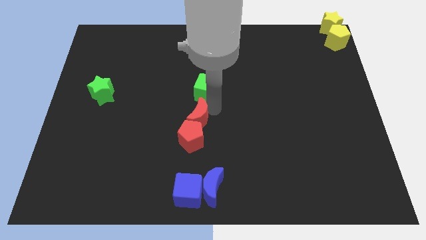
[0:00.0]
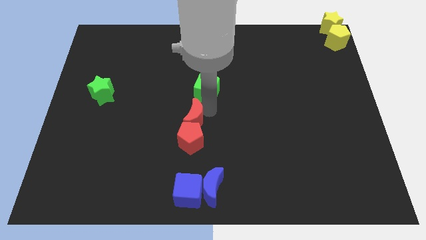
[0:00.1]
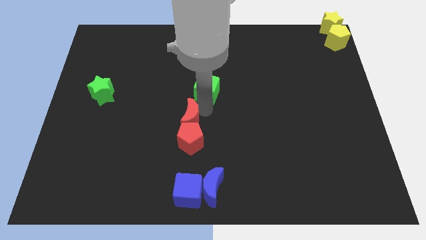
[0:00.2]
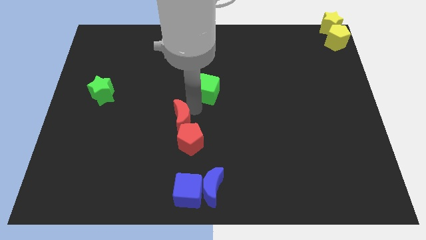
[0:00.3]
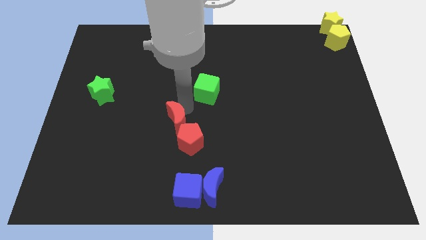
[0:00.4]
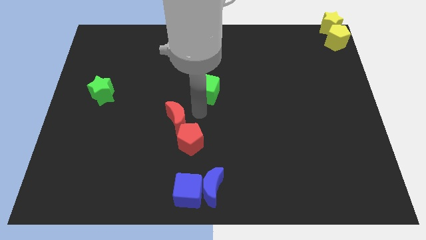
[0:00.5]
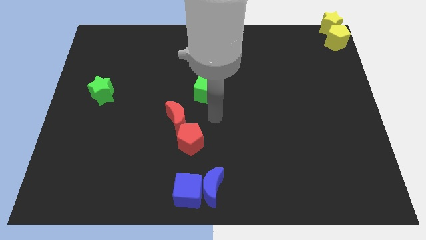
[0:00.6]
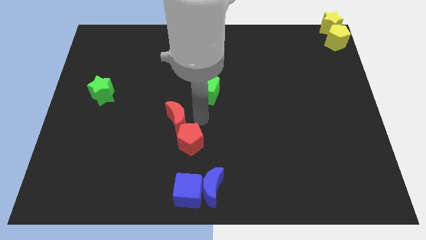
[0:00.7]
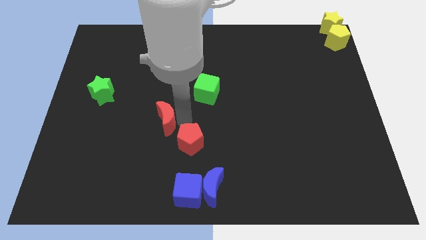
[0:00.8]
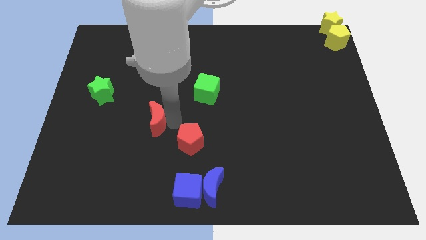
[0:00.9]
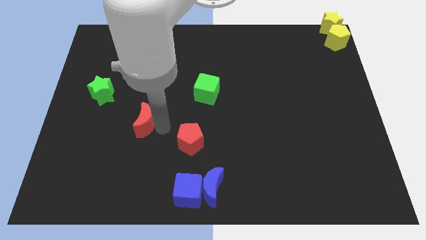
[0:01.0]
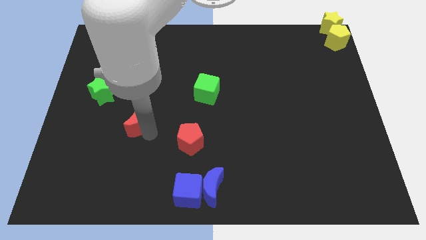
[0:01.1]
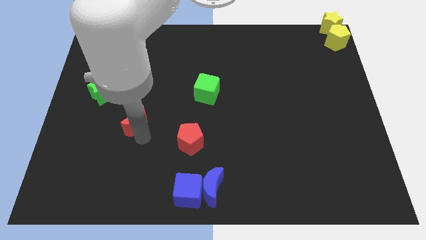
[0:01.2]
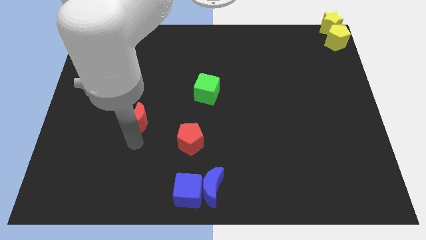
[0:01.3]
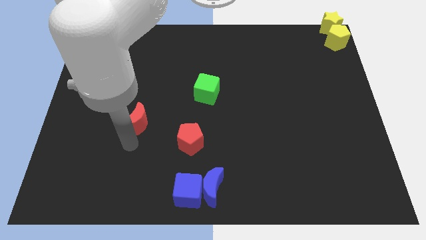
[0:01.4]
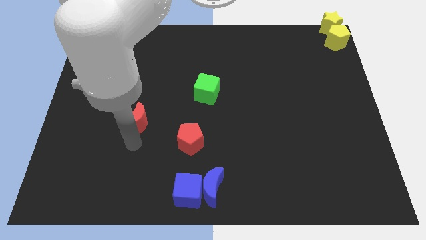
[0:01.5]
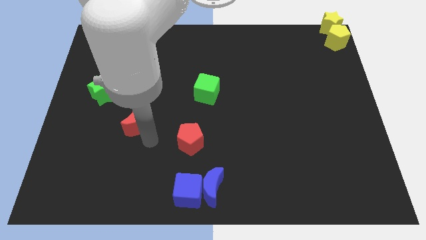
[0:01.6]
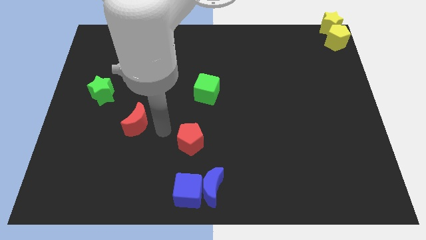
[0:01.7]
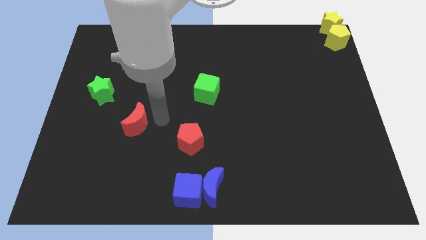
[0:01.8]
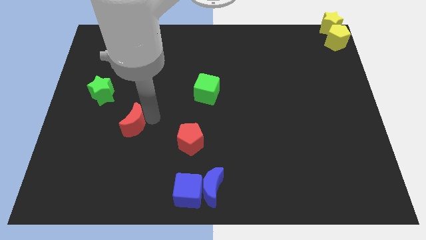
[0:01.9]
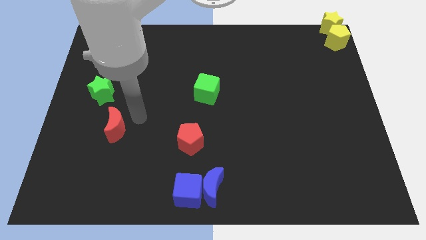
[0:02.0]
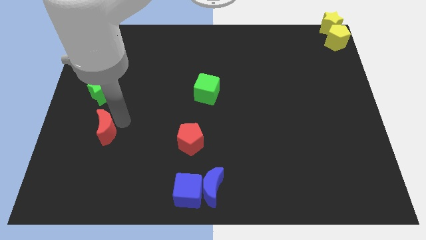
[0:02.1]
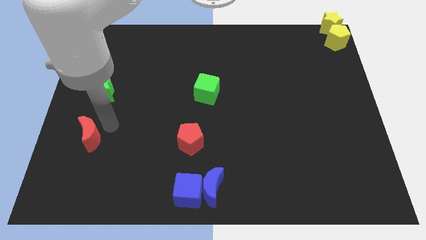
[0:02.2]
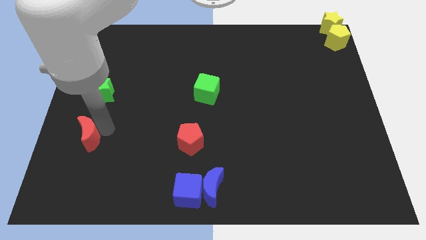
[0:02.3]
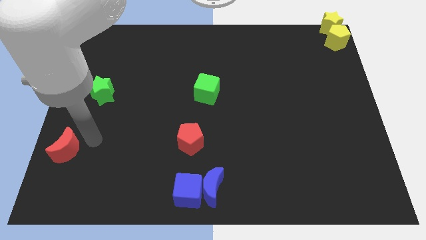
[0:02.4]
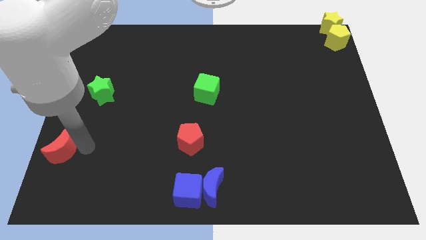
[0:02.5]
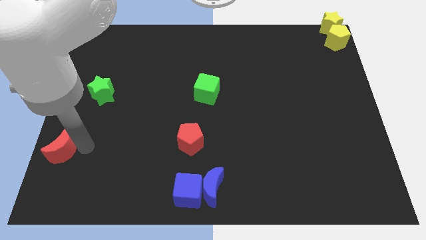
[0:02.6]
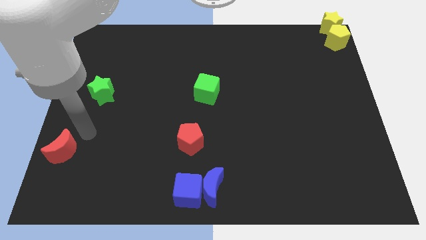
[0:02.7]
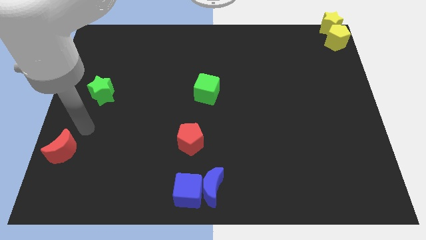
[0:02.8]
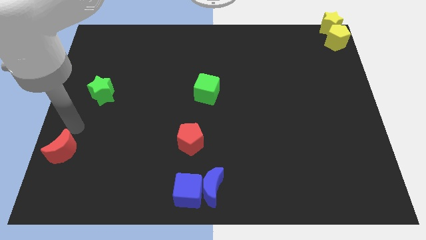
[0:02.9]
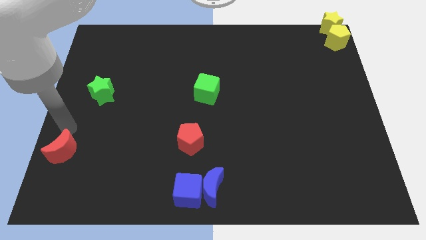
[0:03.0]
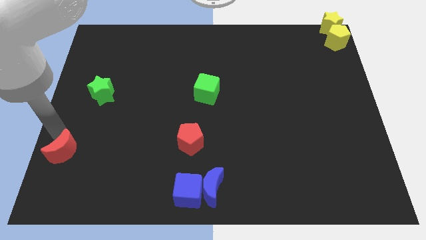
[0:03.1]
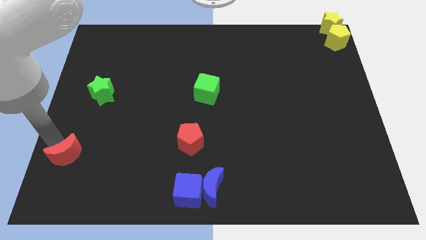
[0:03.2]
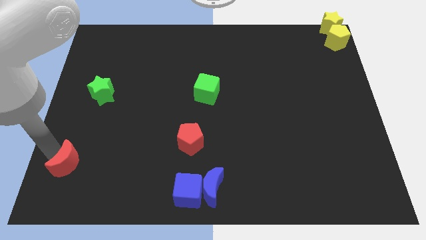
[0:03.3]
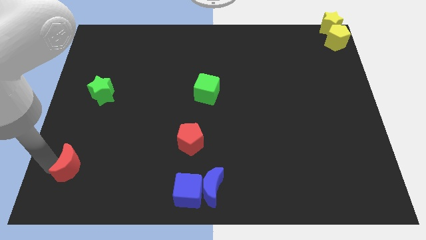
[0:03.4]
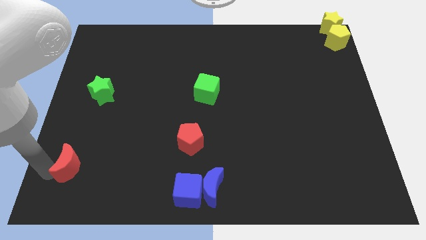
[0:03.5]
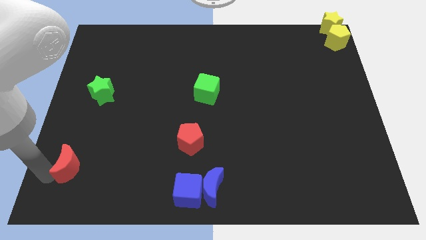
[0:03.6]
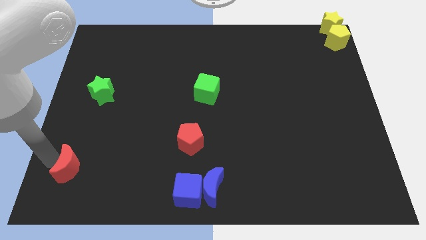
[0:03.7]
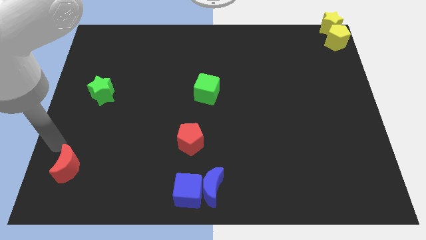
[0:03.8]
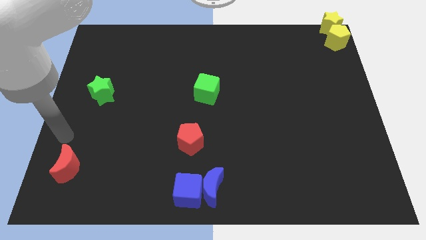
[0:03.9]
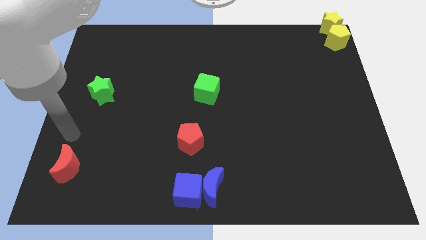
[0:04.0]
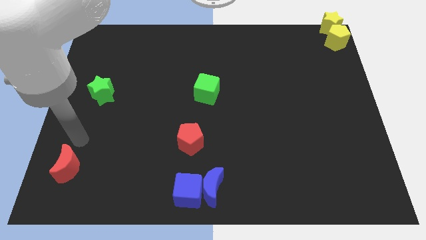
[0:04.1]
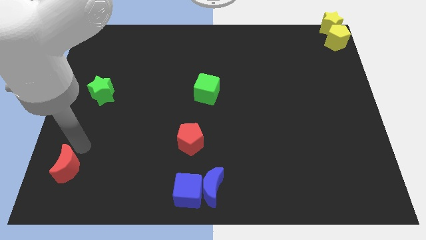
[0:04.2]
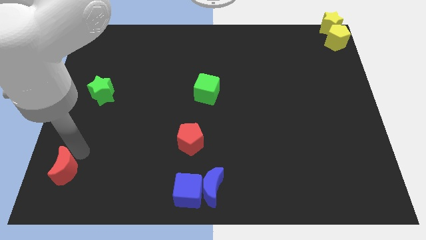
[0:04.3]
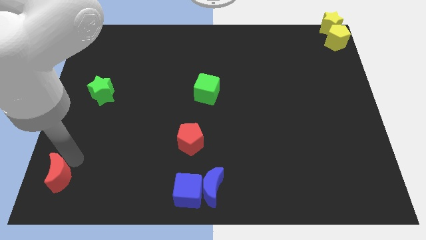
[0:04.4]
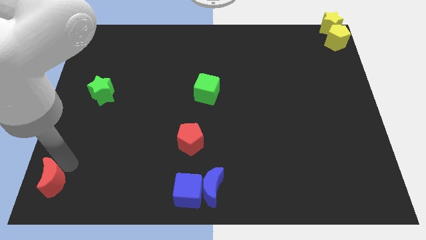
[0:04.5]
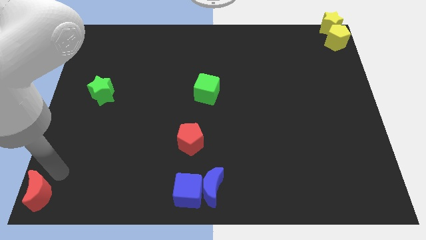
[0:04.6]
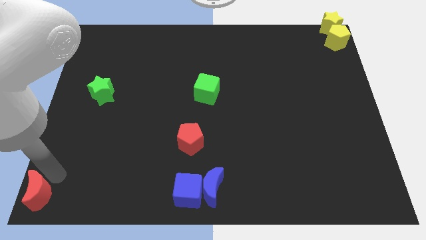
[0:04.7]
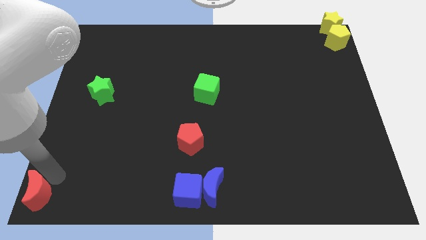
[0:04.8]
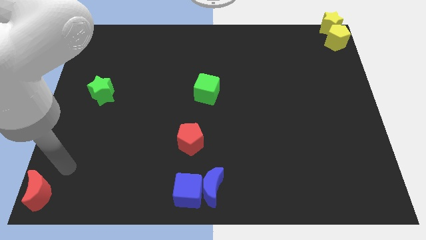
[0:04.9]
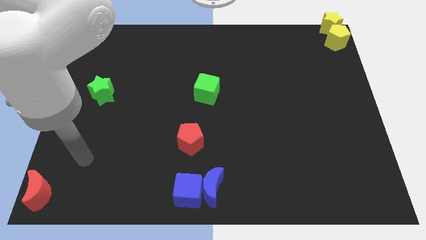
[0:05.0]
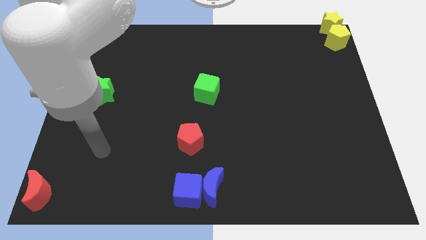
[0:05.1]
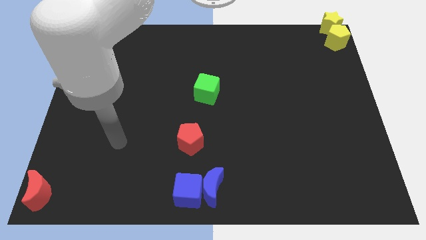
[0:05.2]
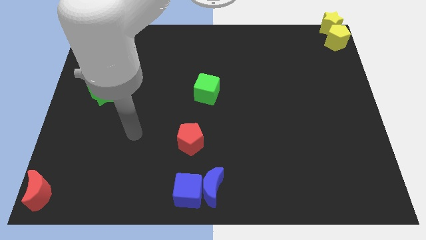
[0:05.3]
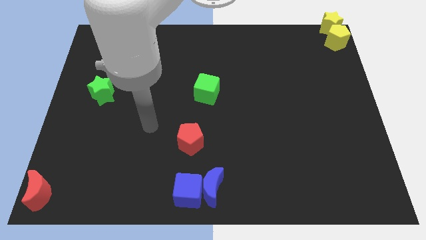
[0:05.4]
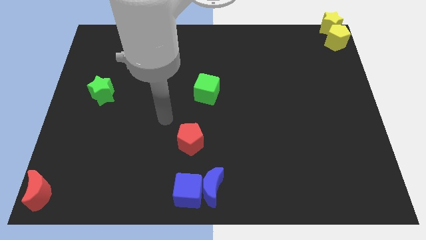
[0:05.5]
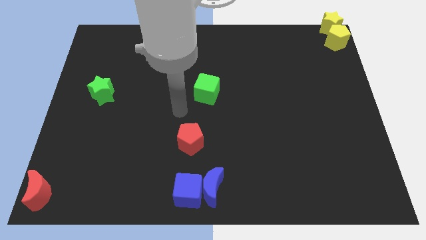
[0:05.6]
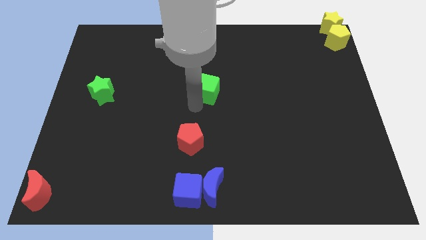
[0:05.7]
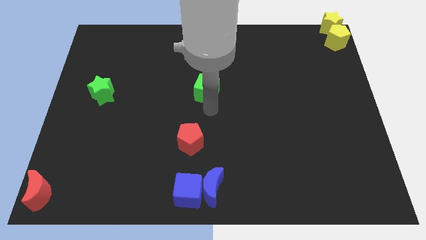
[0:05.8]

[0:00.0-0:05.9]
place red crescent below left corner

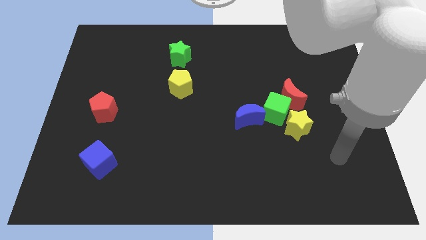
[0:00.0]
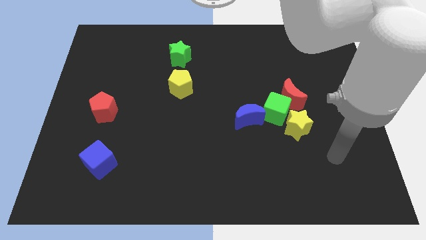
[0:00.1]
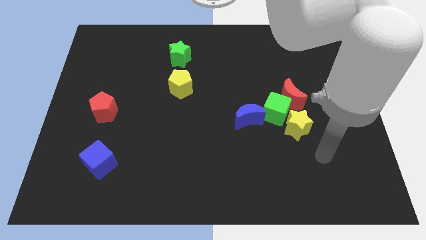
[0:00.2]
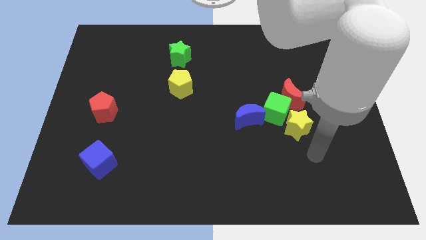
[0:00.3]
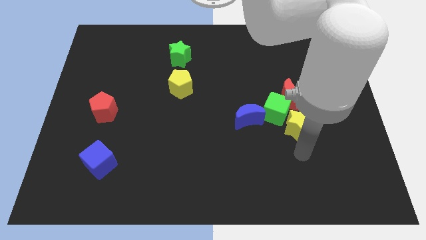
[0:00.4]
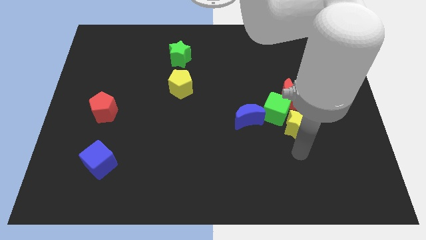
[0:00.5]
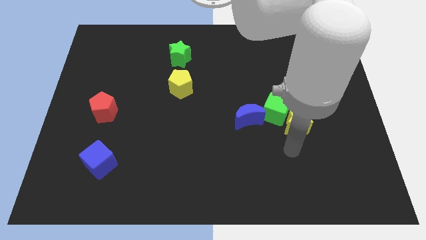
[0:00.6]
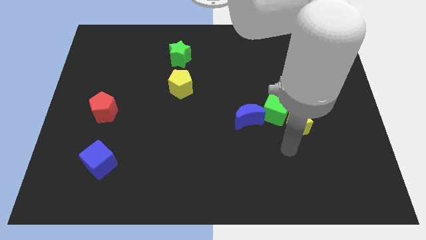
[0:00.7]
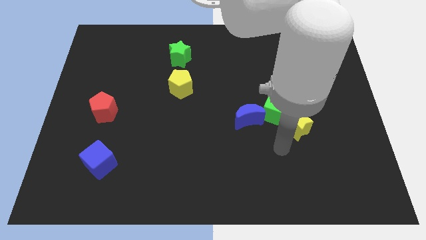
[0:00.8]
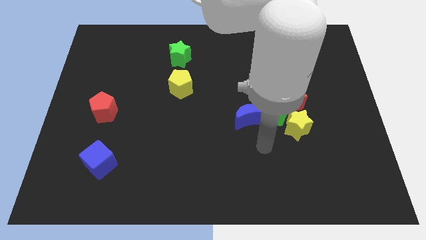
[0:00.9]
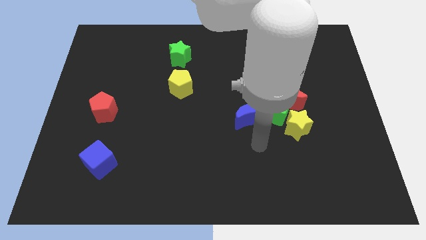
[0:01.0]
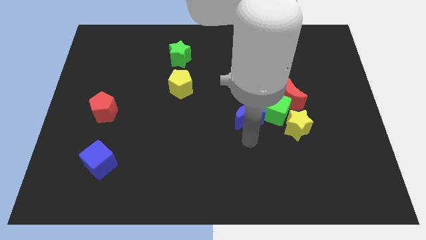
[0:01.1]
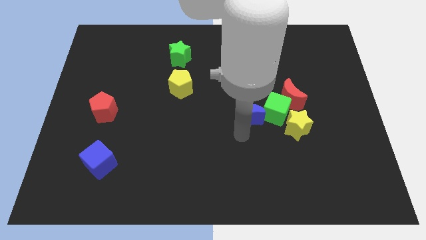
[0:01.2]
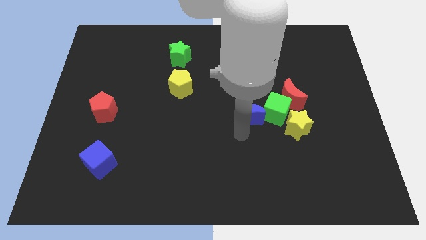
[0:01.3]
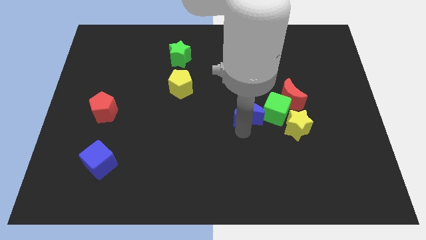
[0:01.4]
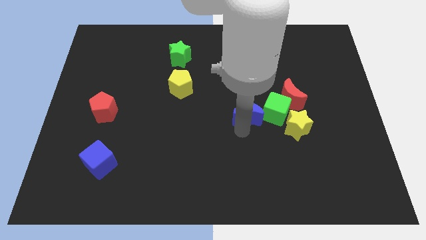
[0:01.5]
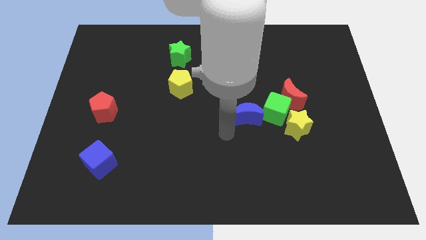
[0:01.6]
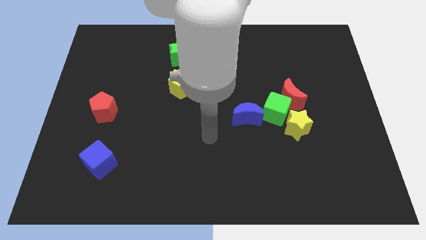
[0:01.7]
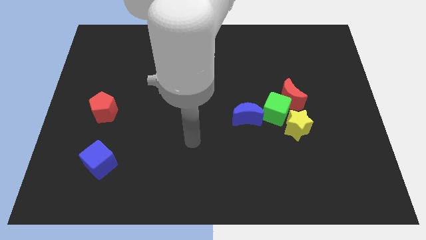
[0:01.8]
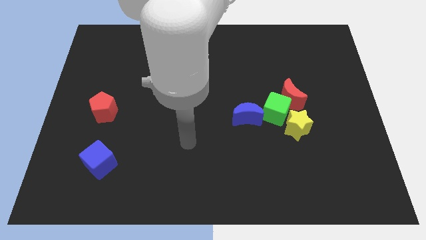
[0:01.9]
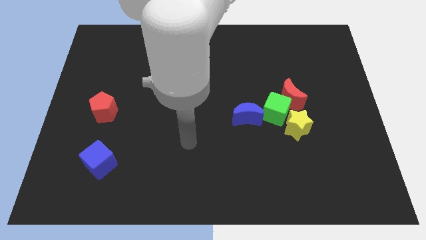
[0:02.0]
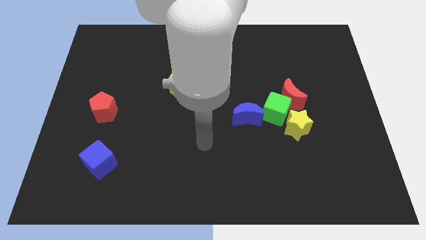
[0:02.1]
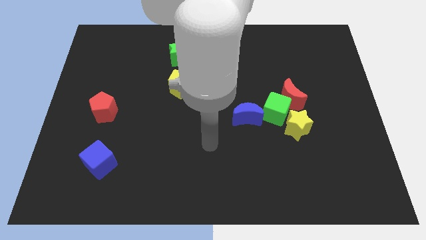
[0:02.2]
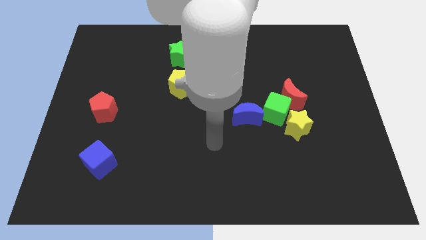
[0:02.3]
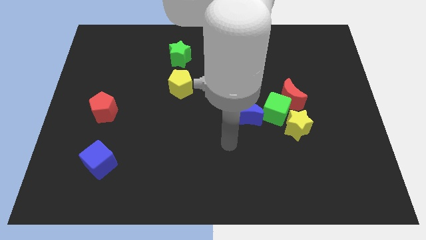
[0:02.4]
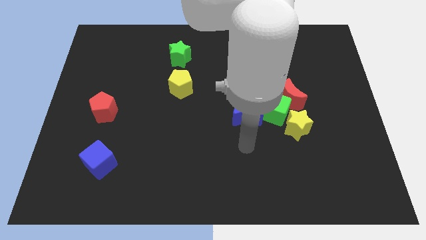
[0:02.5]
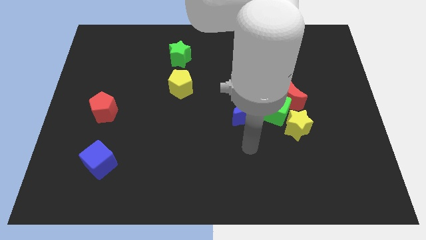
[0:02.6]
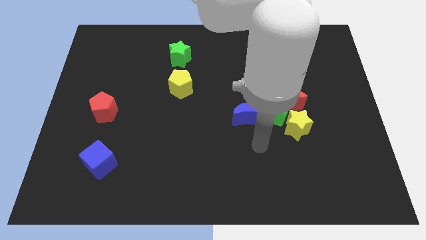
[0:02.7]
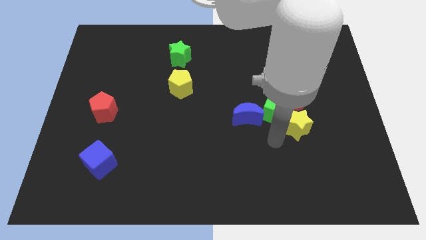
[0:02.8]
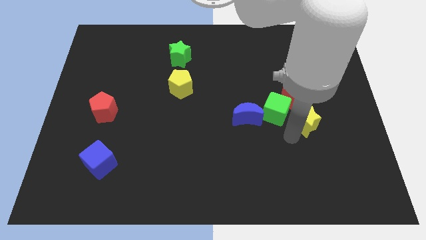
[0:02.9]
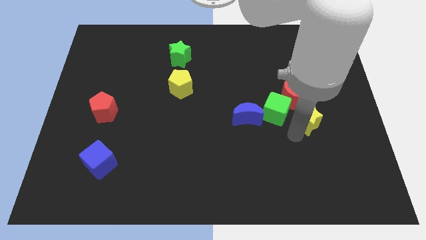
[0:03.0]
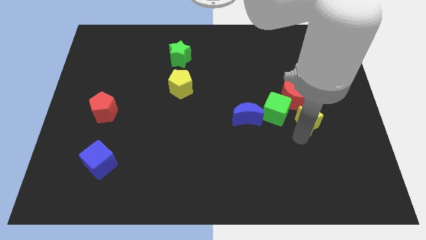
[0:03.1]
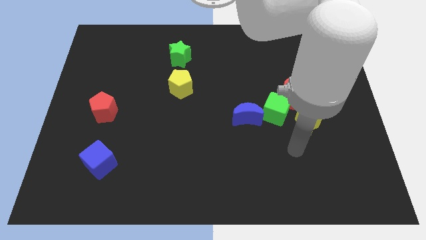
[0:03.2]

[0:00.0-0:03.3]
move the arm towards the yellow star
